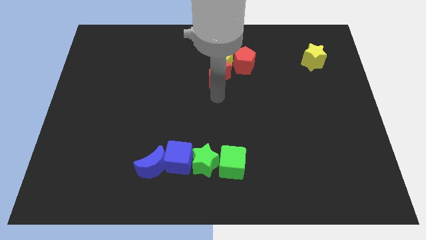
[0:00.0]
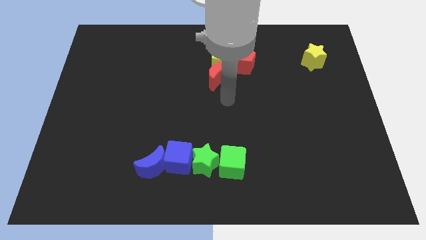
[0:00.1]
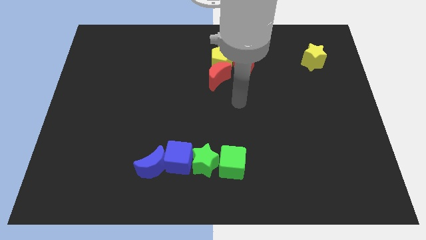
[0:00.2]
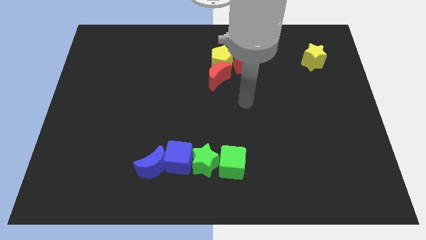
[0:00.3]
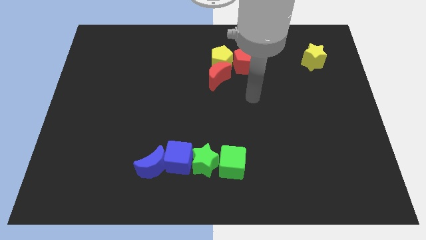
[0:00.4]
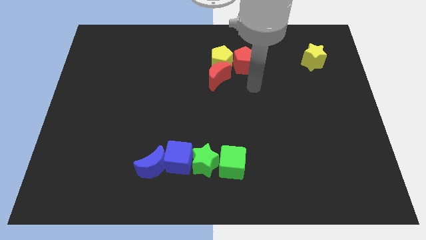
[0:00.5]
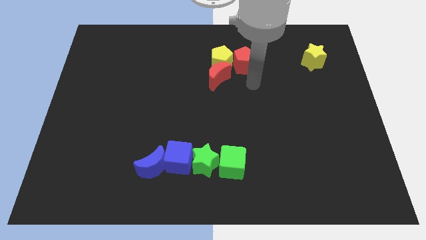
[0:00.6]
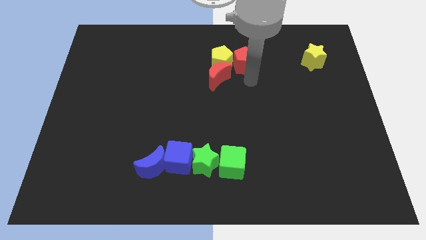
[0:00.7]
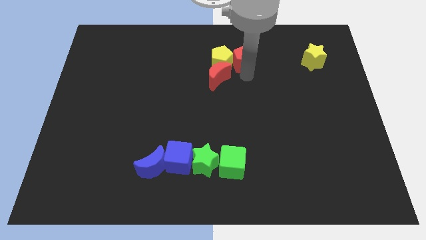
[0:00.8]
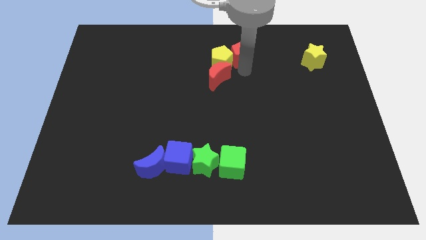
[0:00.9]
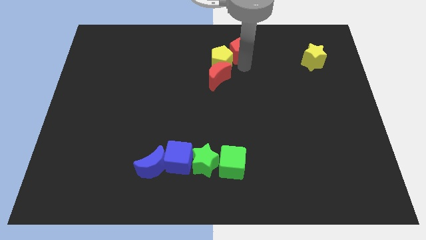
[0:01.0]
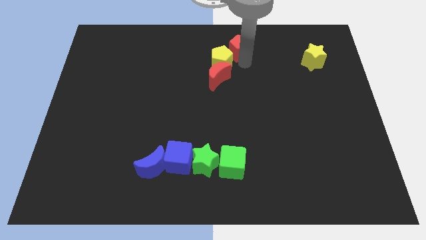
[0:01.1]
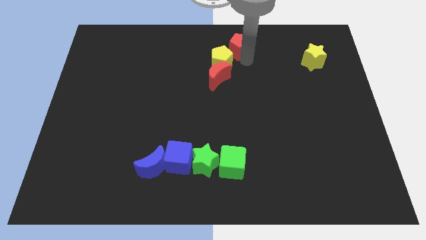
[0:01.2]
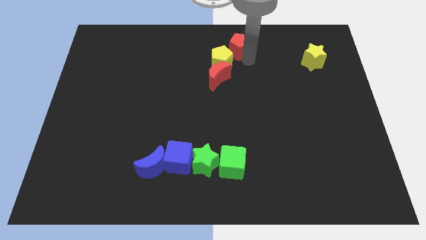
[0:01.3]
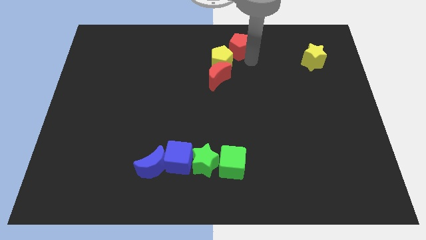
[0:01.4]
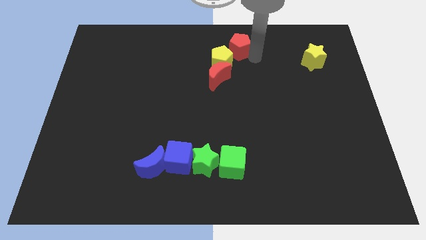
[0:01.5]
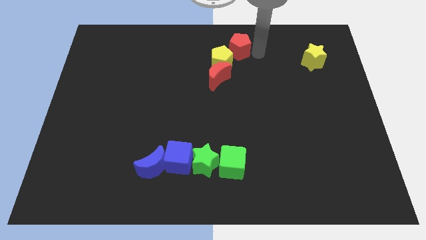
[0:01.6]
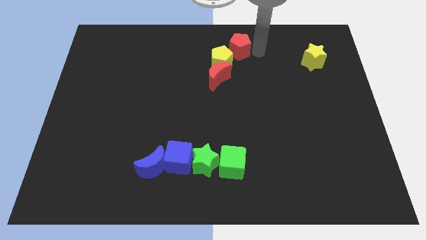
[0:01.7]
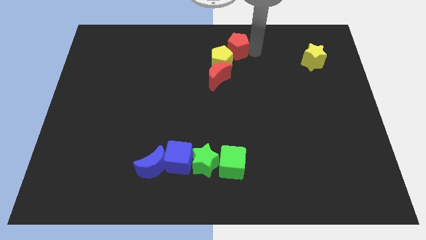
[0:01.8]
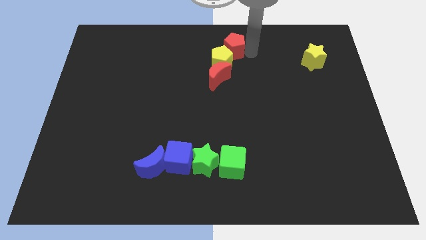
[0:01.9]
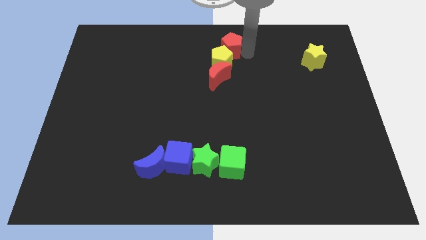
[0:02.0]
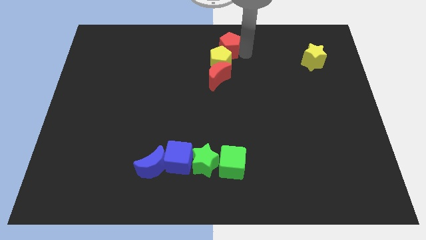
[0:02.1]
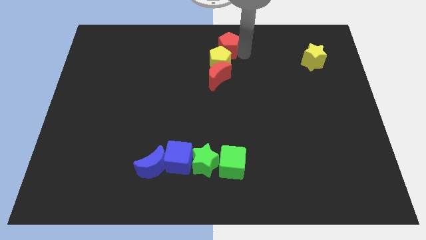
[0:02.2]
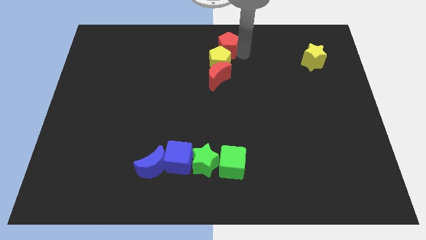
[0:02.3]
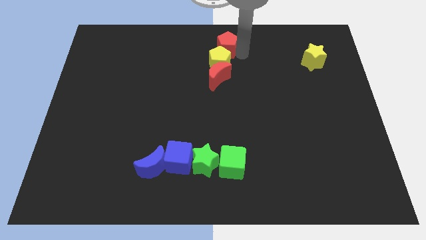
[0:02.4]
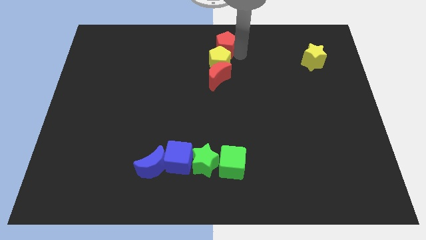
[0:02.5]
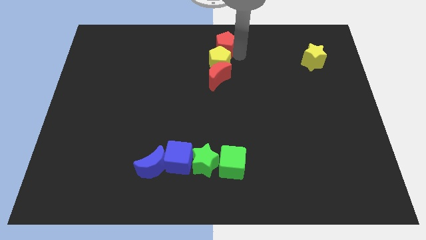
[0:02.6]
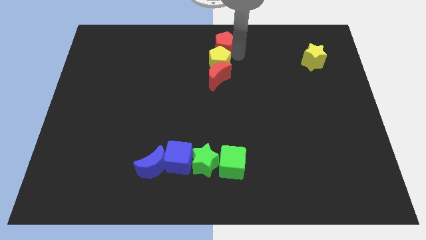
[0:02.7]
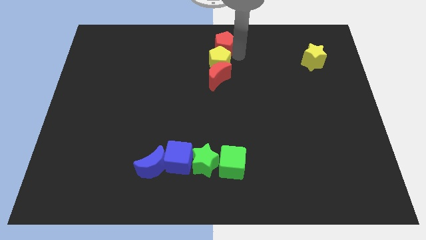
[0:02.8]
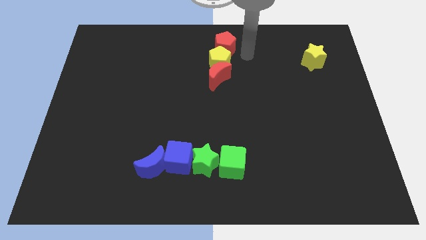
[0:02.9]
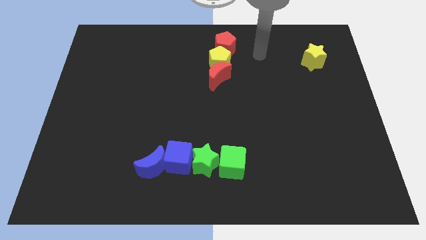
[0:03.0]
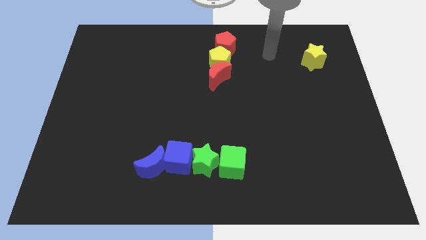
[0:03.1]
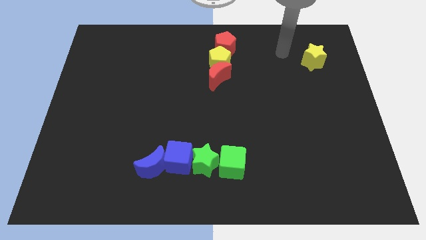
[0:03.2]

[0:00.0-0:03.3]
move the red pentagon above the yellow pentagon

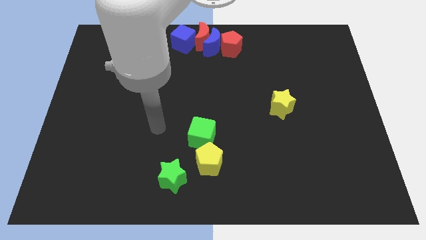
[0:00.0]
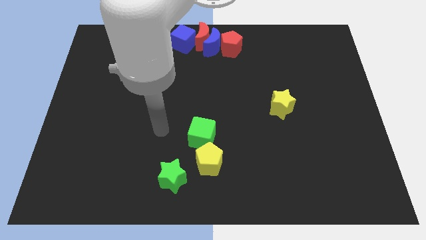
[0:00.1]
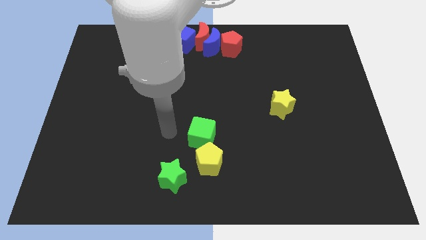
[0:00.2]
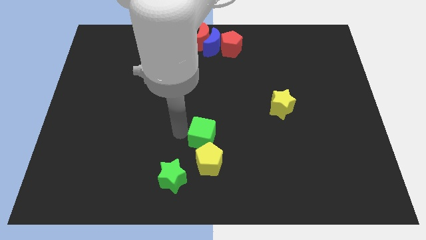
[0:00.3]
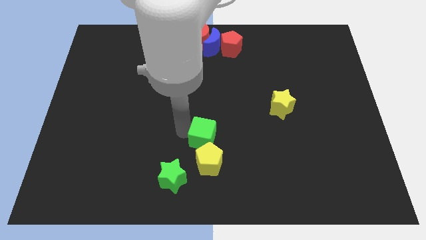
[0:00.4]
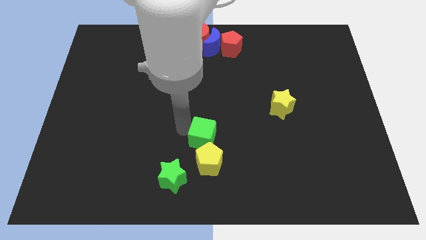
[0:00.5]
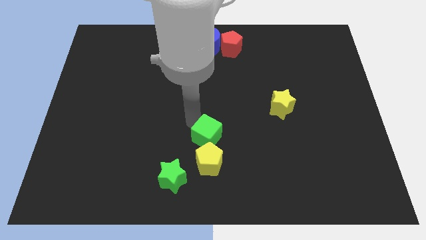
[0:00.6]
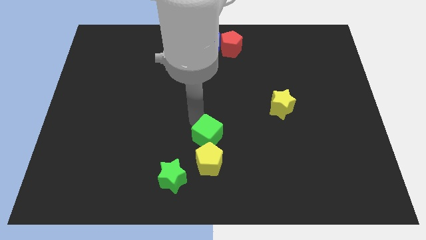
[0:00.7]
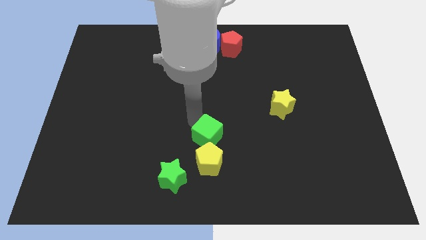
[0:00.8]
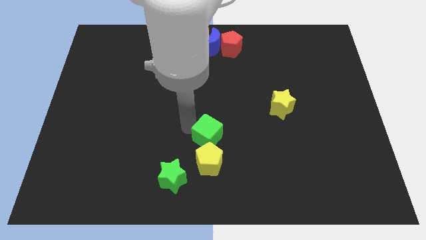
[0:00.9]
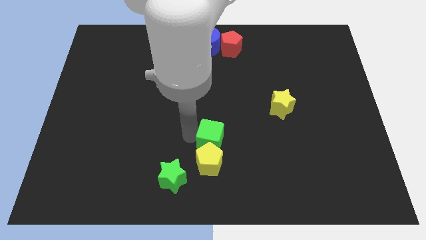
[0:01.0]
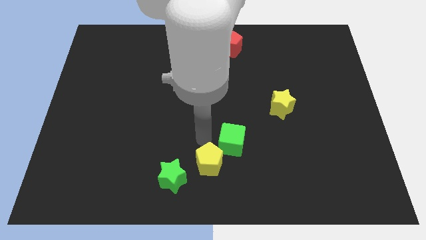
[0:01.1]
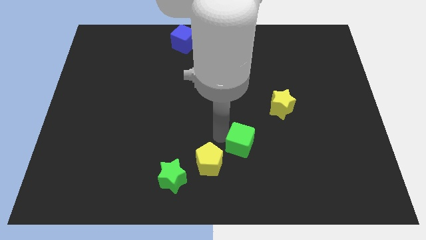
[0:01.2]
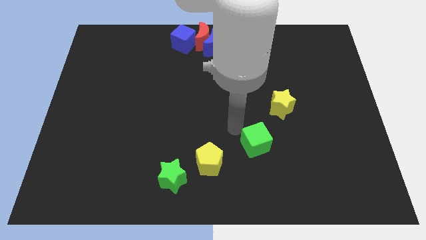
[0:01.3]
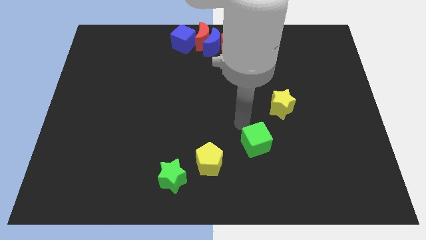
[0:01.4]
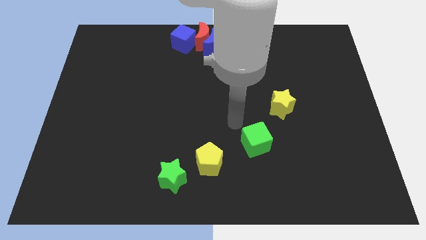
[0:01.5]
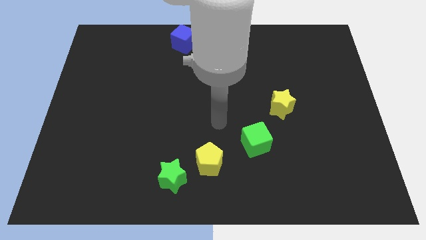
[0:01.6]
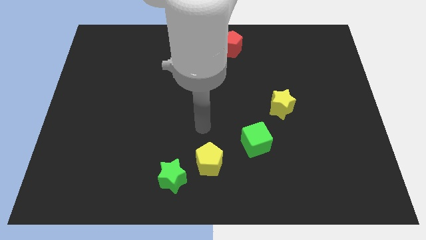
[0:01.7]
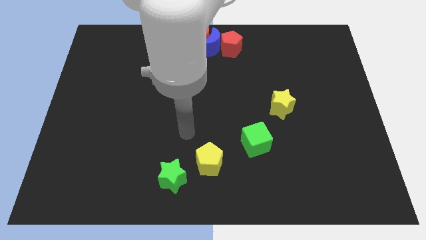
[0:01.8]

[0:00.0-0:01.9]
move green cube apart from the yellow pentagon

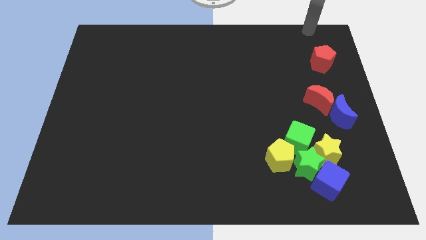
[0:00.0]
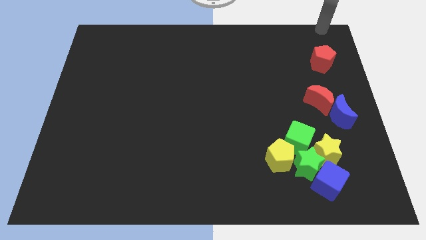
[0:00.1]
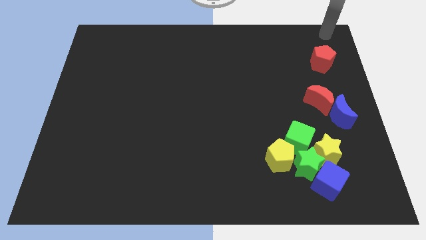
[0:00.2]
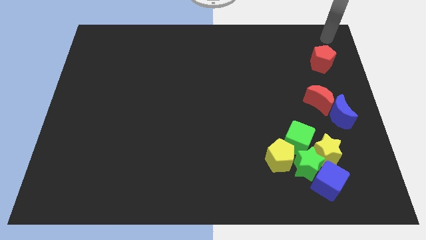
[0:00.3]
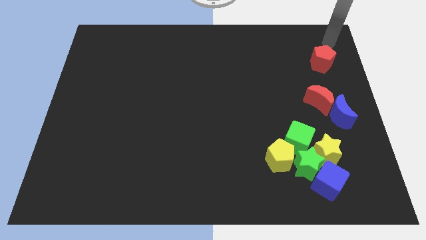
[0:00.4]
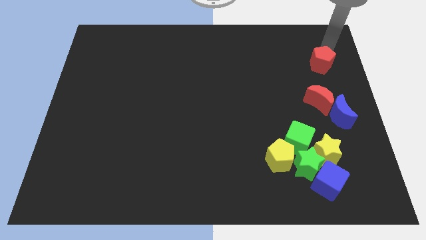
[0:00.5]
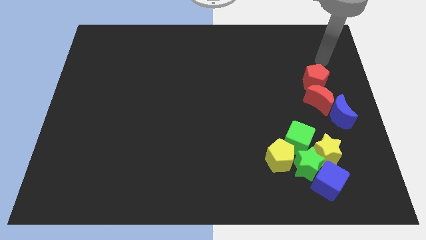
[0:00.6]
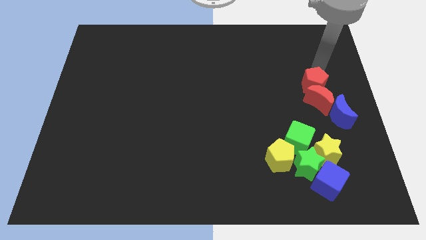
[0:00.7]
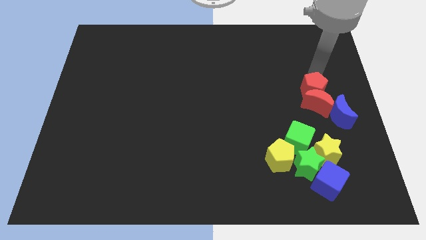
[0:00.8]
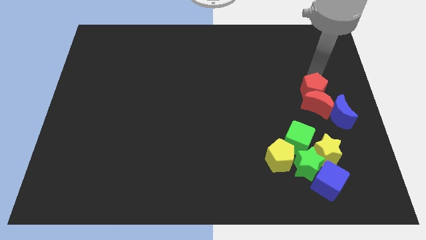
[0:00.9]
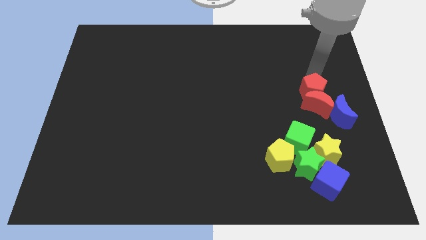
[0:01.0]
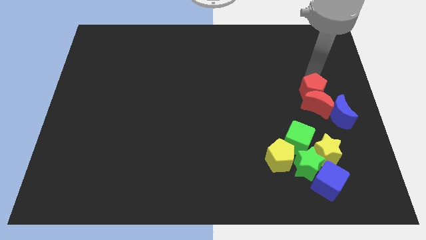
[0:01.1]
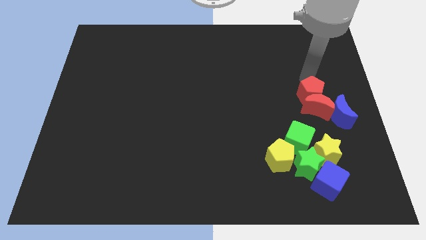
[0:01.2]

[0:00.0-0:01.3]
push the red pentagon into the red moon

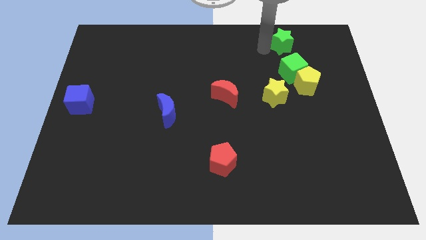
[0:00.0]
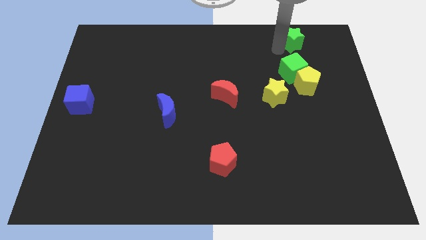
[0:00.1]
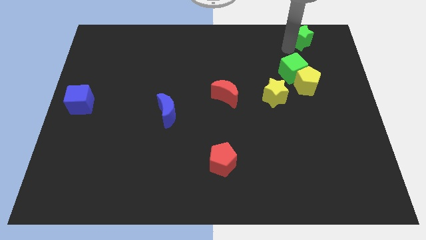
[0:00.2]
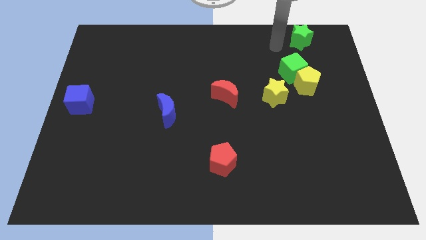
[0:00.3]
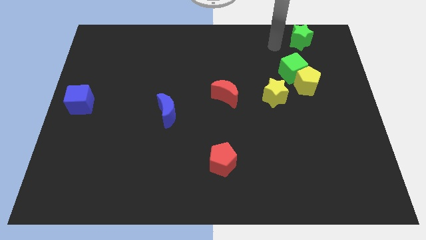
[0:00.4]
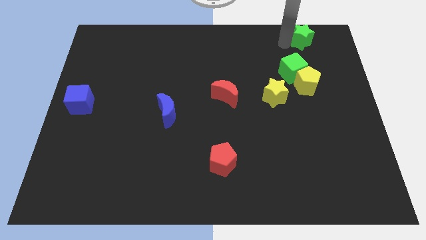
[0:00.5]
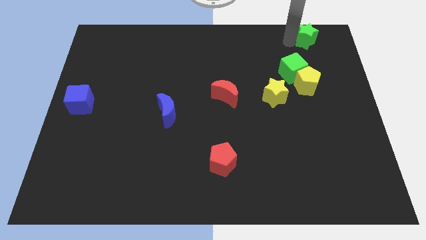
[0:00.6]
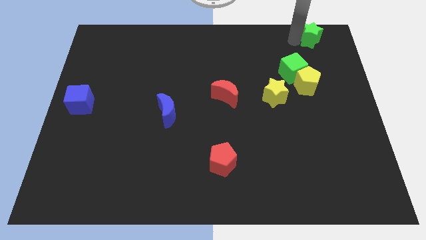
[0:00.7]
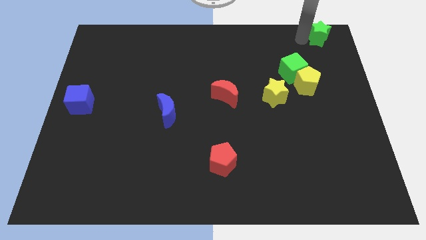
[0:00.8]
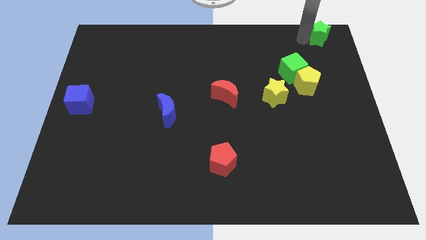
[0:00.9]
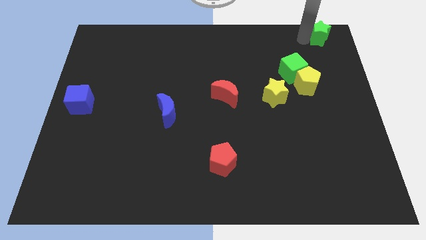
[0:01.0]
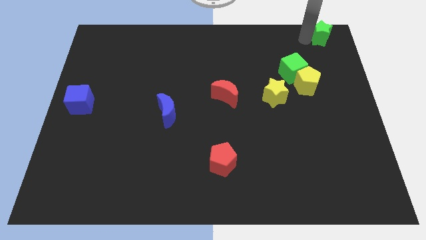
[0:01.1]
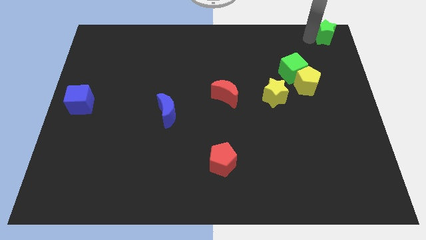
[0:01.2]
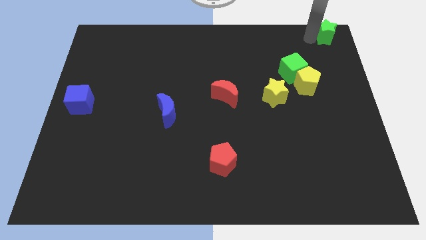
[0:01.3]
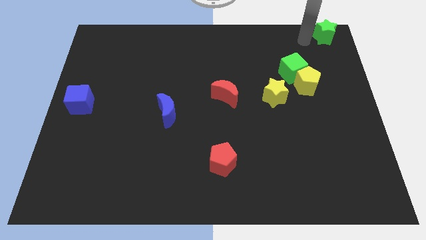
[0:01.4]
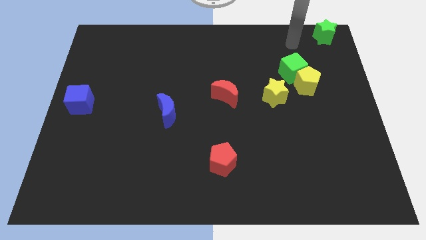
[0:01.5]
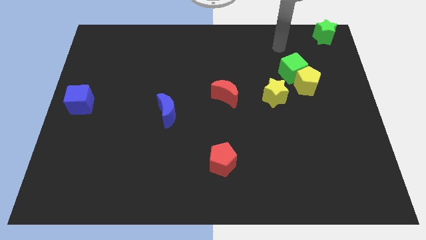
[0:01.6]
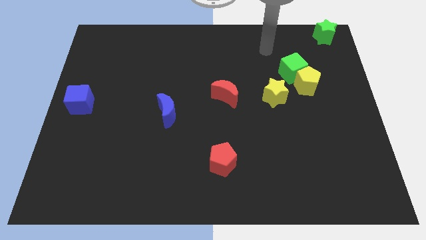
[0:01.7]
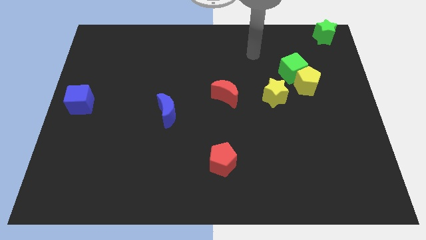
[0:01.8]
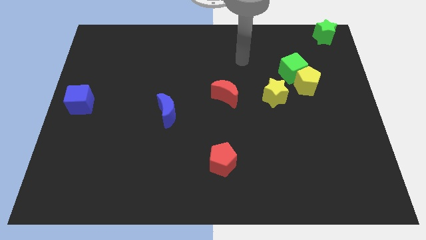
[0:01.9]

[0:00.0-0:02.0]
move the green star towards the top right

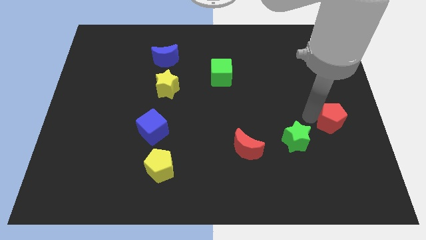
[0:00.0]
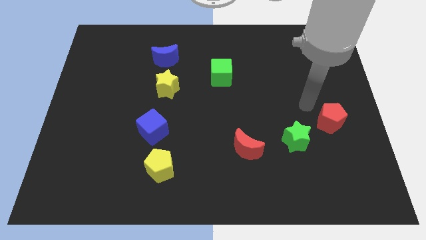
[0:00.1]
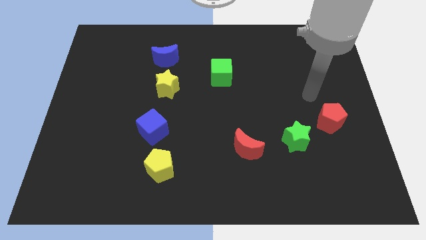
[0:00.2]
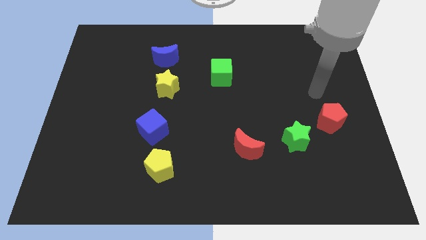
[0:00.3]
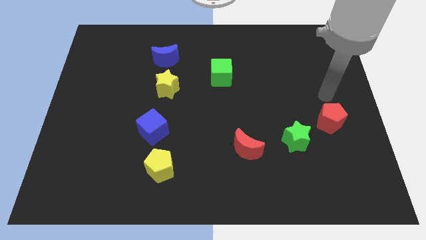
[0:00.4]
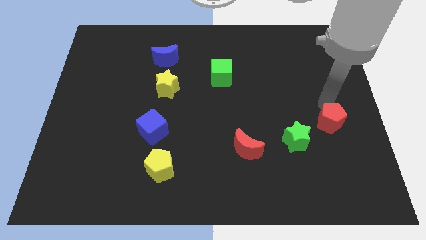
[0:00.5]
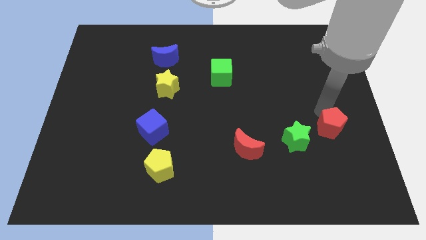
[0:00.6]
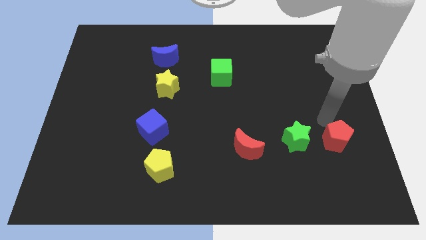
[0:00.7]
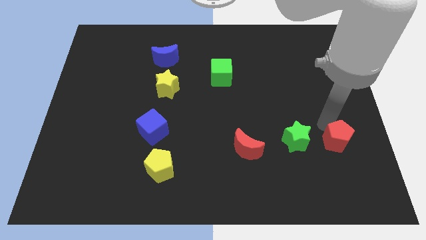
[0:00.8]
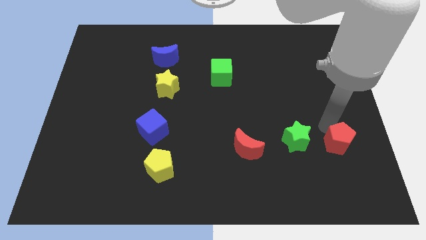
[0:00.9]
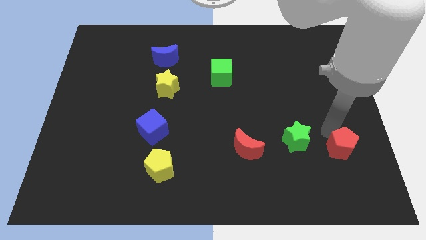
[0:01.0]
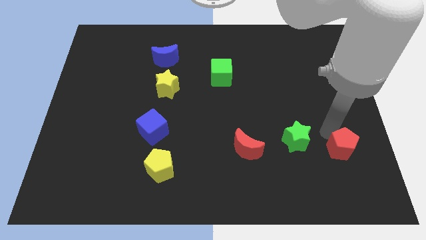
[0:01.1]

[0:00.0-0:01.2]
move the red pentagon to the right of the green star
